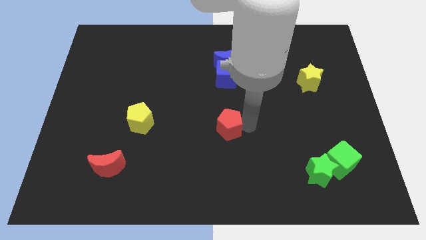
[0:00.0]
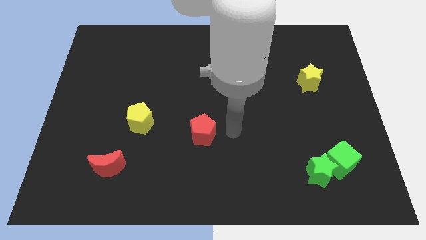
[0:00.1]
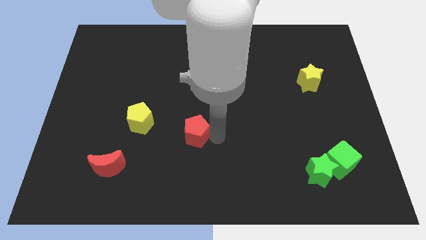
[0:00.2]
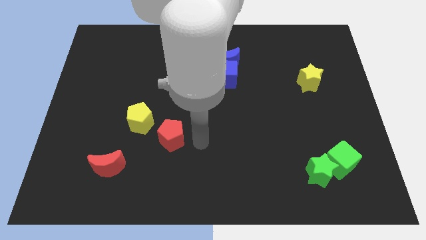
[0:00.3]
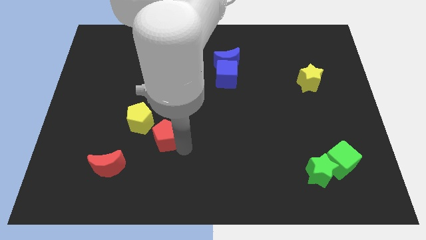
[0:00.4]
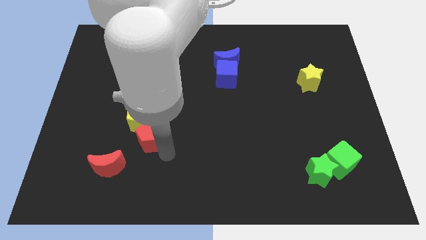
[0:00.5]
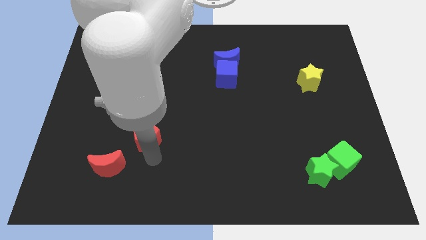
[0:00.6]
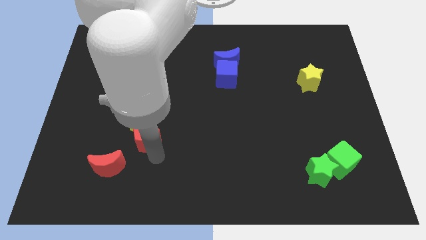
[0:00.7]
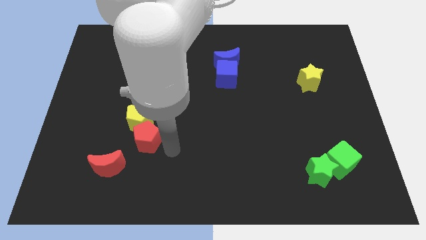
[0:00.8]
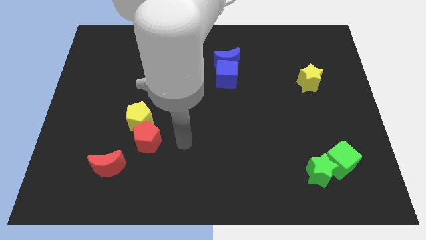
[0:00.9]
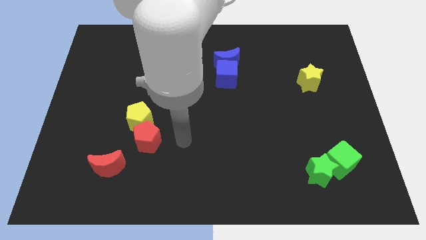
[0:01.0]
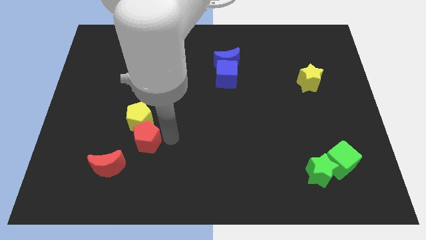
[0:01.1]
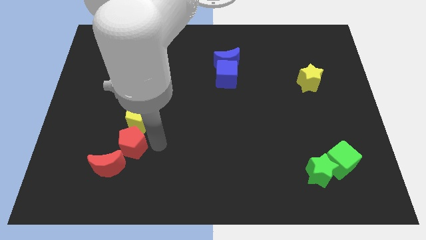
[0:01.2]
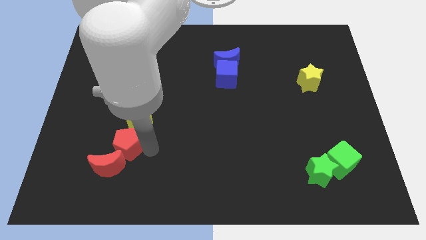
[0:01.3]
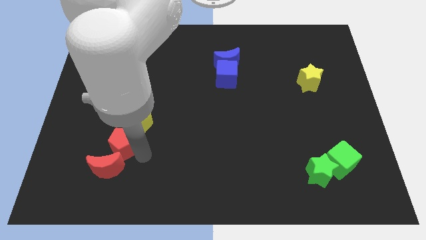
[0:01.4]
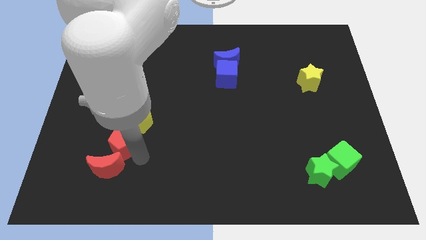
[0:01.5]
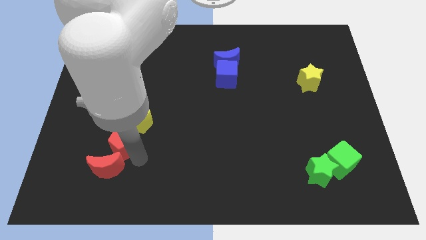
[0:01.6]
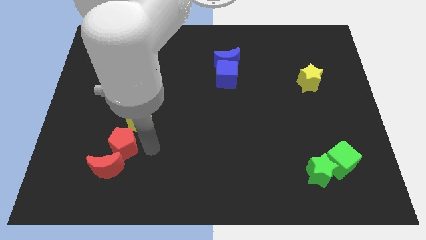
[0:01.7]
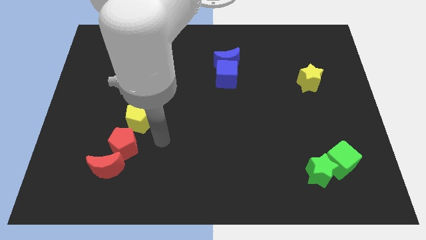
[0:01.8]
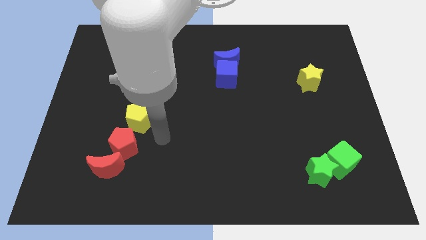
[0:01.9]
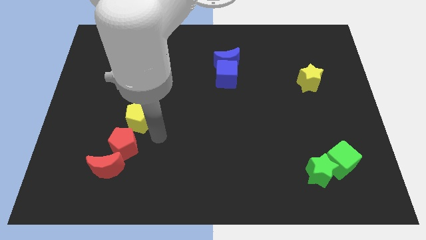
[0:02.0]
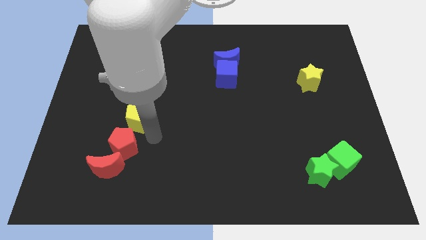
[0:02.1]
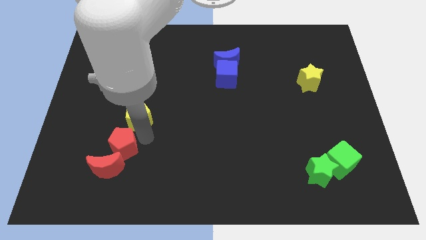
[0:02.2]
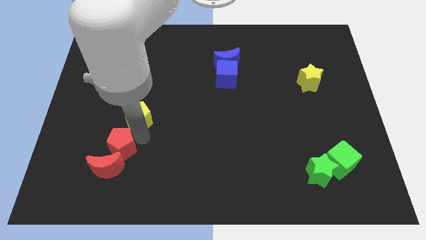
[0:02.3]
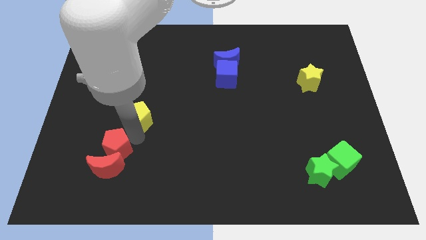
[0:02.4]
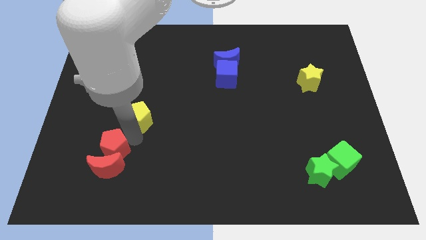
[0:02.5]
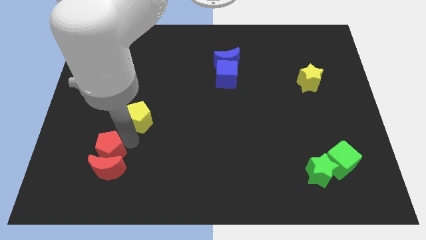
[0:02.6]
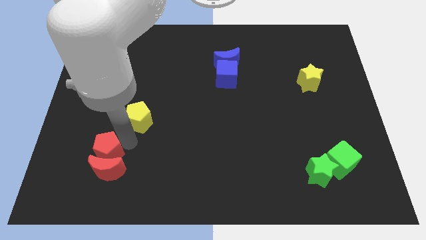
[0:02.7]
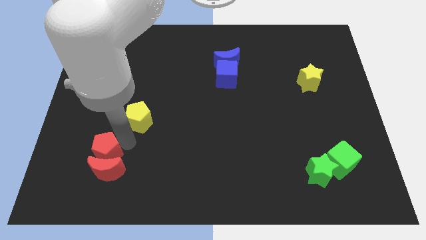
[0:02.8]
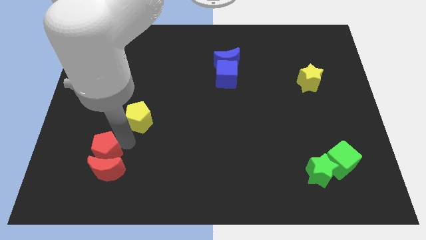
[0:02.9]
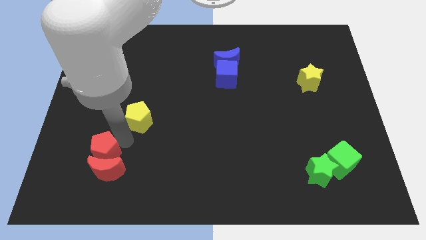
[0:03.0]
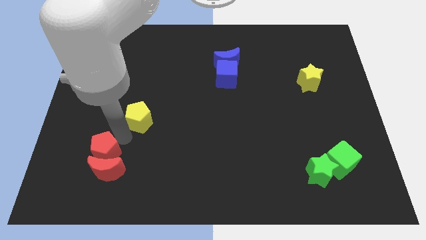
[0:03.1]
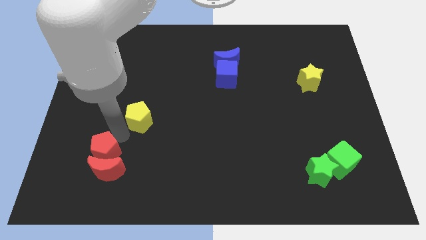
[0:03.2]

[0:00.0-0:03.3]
move the red pentagon into top of the red moon

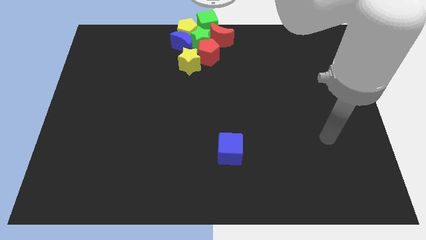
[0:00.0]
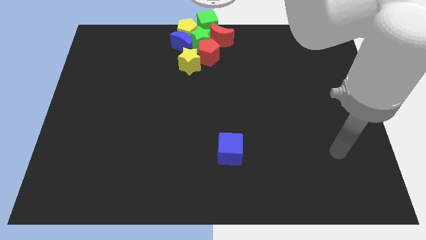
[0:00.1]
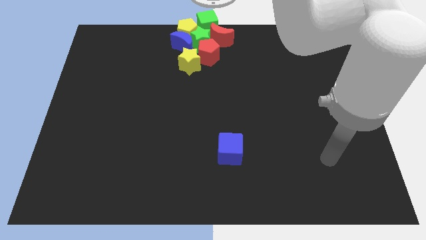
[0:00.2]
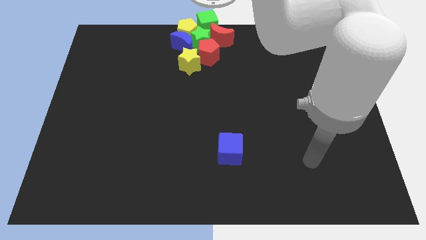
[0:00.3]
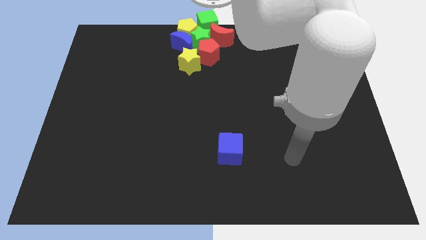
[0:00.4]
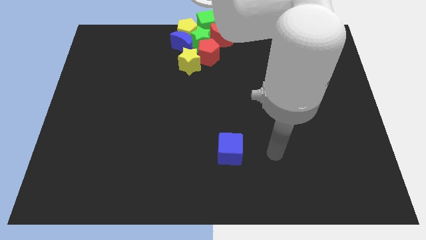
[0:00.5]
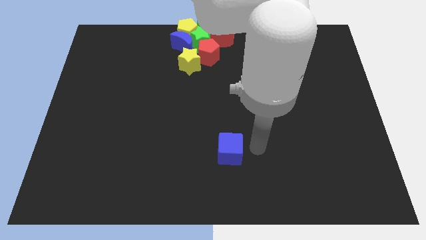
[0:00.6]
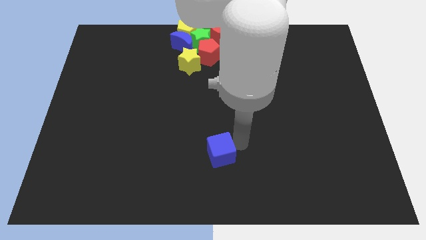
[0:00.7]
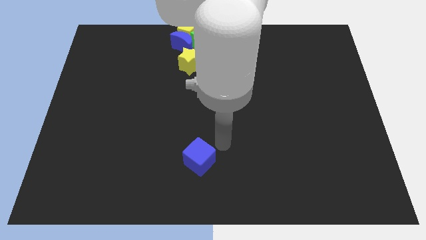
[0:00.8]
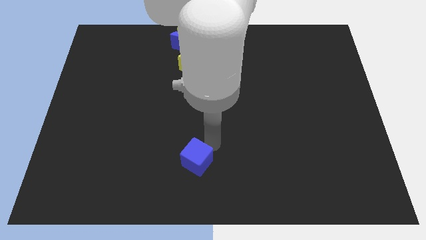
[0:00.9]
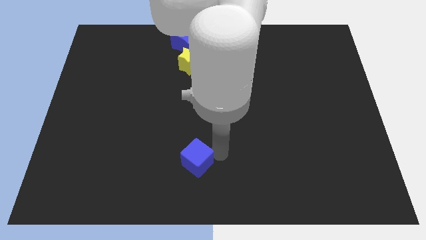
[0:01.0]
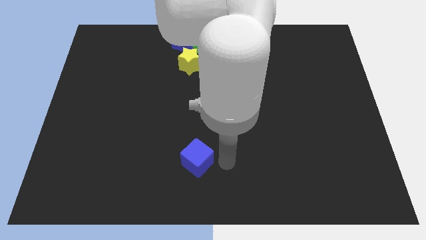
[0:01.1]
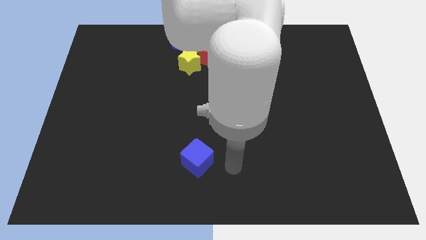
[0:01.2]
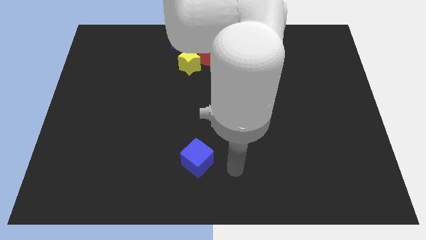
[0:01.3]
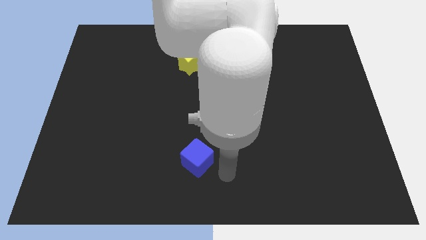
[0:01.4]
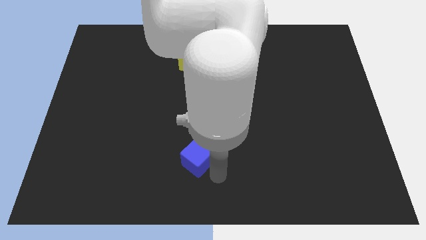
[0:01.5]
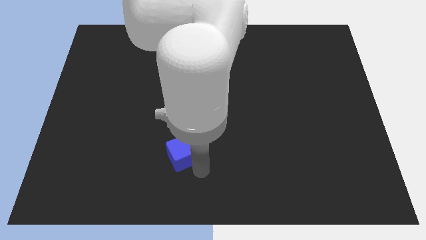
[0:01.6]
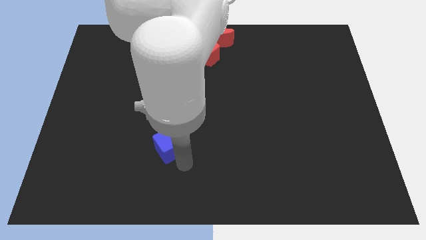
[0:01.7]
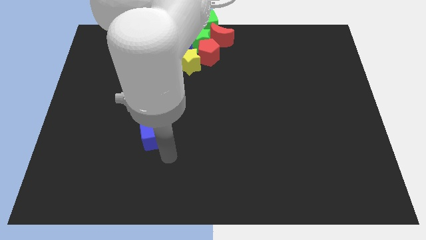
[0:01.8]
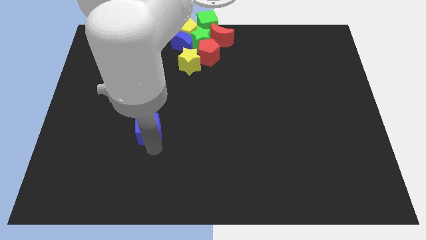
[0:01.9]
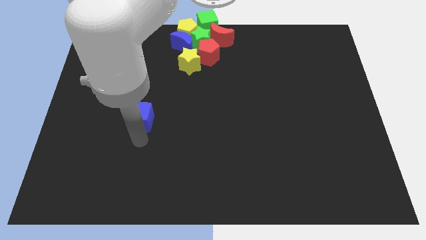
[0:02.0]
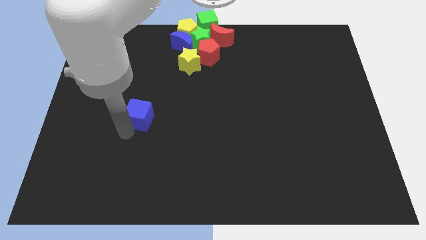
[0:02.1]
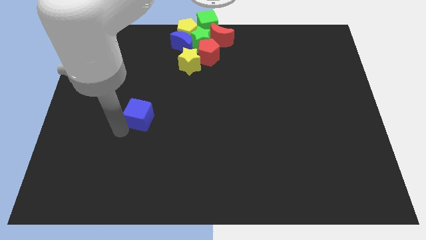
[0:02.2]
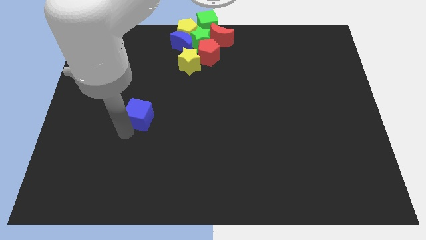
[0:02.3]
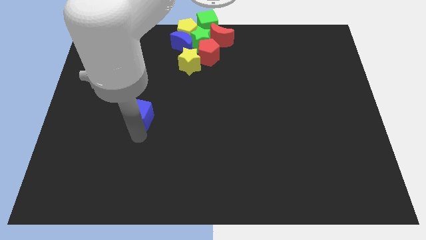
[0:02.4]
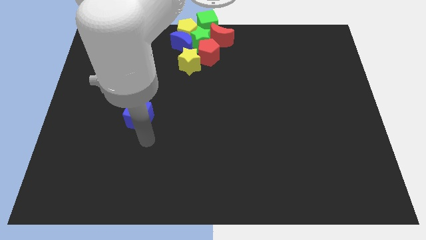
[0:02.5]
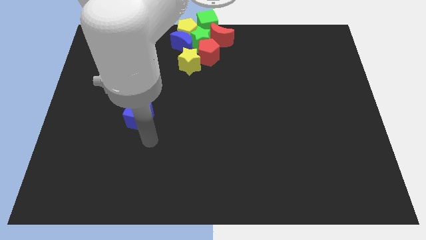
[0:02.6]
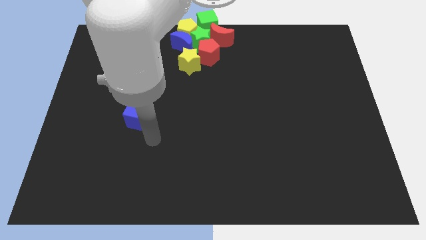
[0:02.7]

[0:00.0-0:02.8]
place the blue cube diagonally to the yellow star

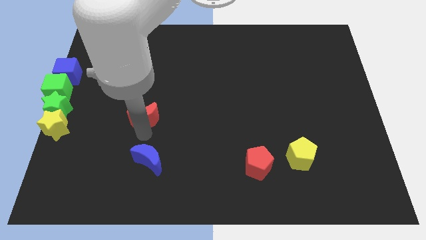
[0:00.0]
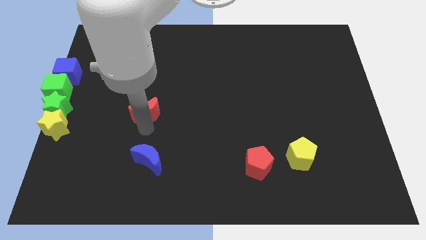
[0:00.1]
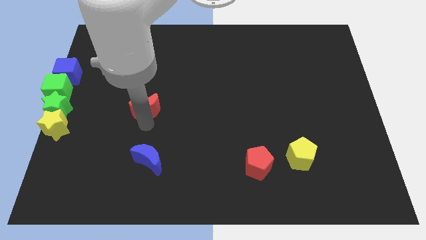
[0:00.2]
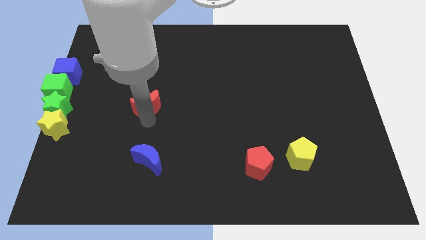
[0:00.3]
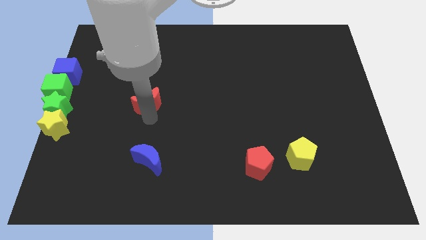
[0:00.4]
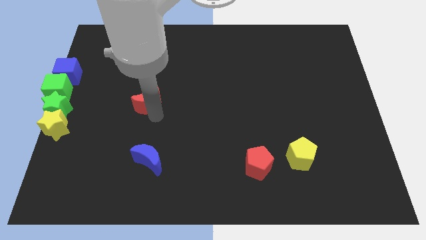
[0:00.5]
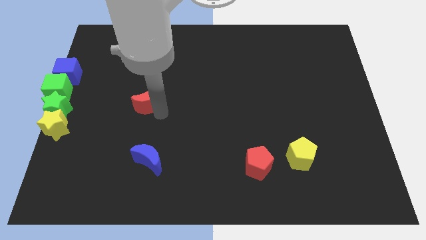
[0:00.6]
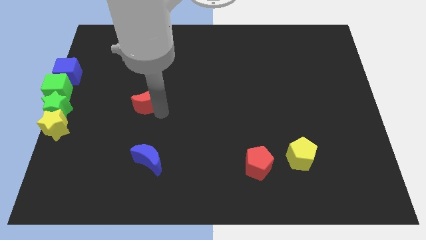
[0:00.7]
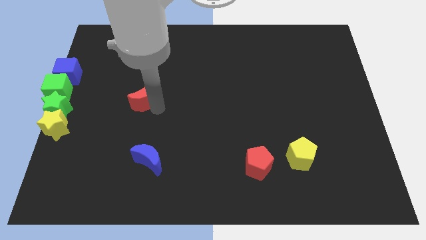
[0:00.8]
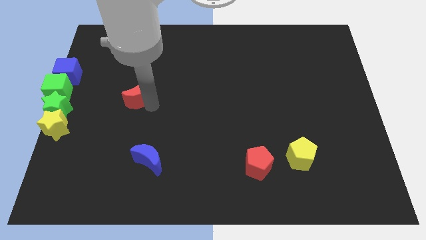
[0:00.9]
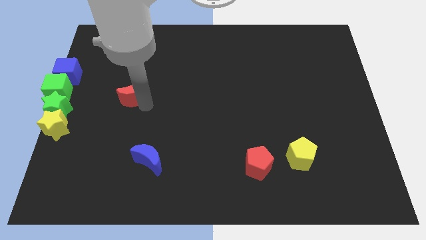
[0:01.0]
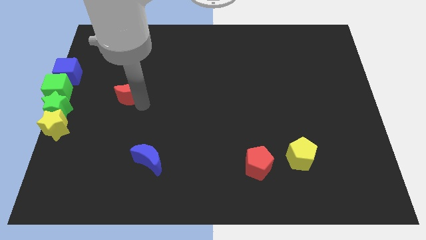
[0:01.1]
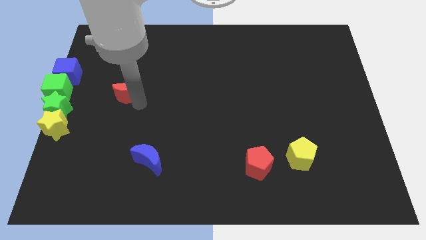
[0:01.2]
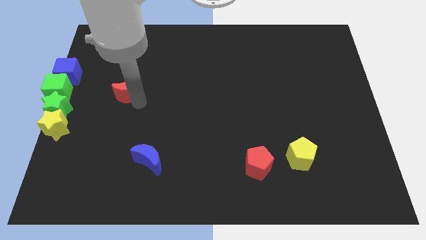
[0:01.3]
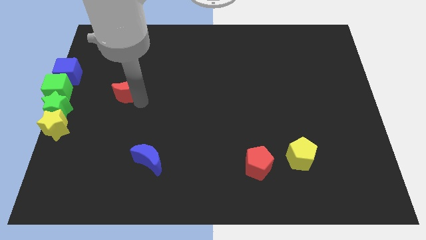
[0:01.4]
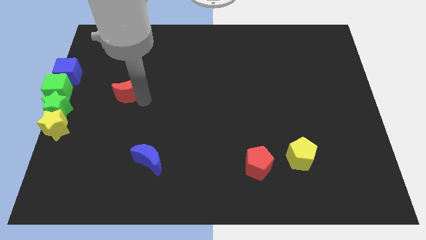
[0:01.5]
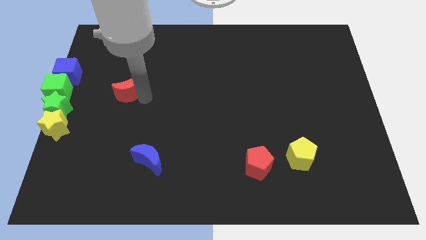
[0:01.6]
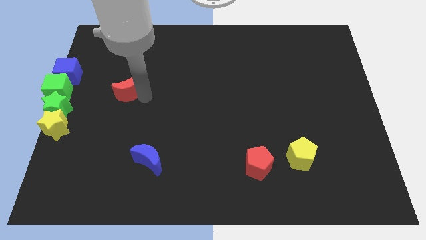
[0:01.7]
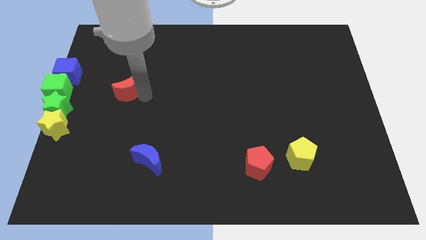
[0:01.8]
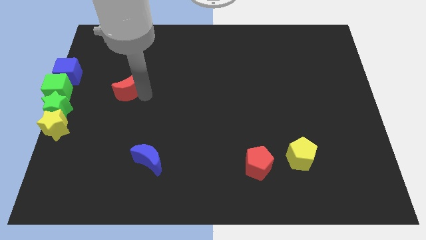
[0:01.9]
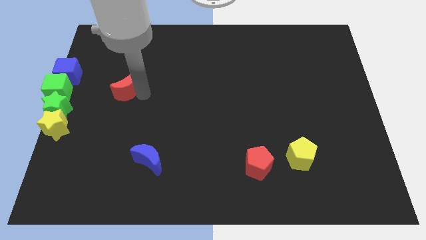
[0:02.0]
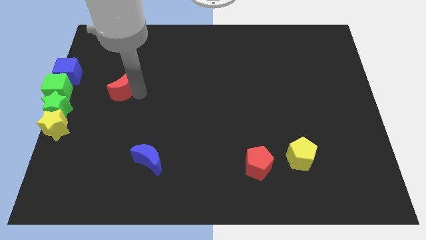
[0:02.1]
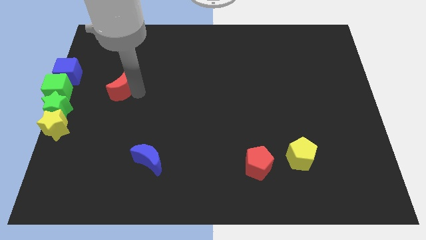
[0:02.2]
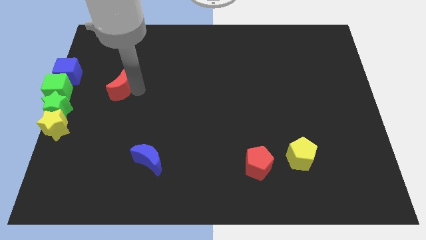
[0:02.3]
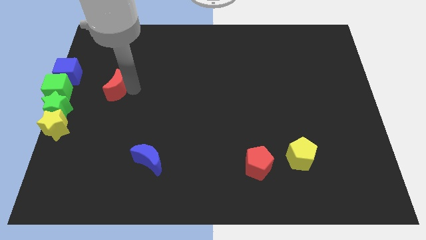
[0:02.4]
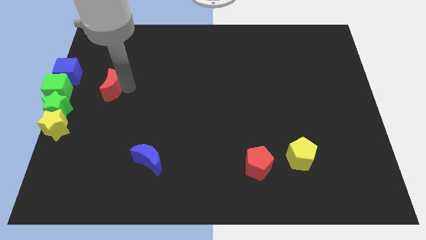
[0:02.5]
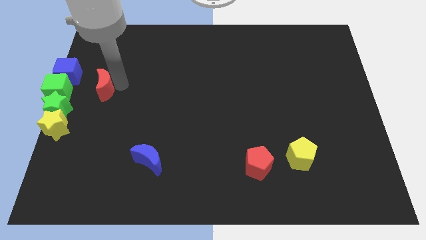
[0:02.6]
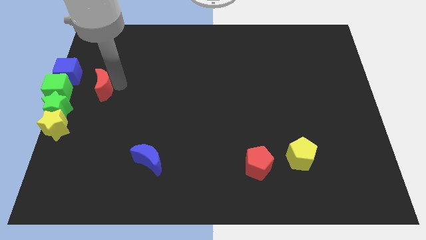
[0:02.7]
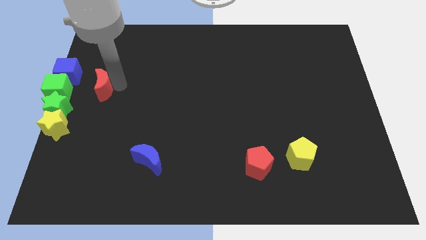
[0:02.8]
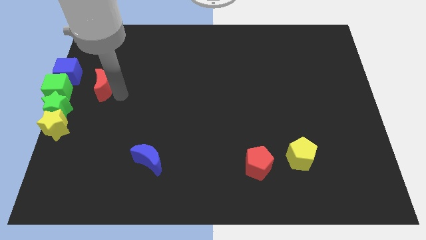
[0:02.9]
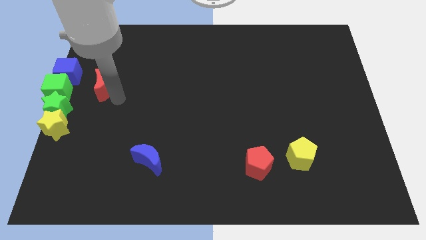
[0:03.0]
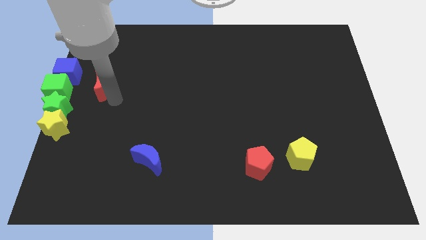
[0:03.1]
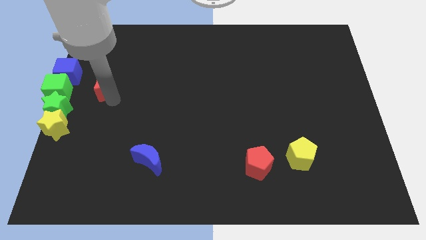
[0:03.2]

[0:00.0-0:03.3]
move the red moon to the right of the blue and green cube
